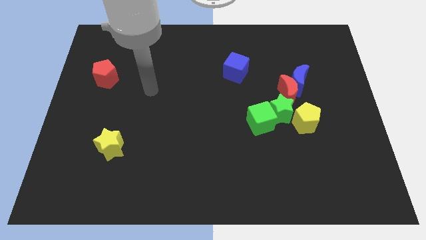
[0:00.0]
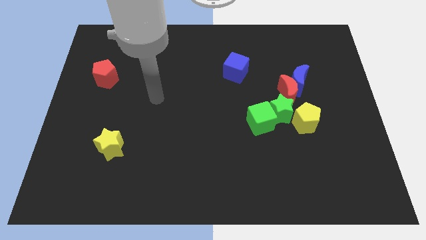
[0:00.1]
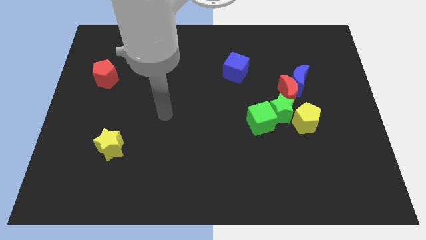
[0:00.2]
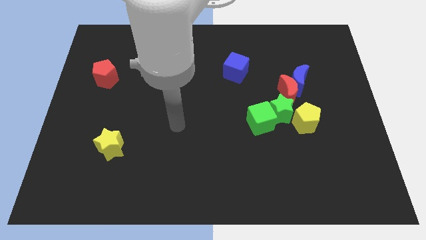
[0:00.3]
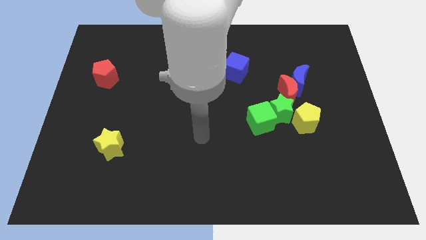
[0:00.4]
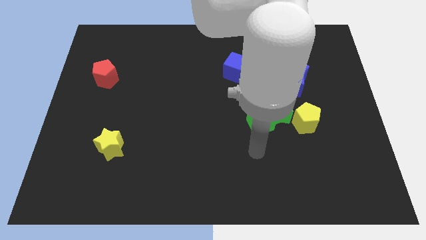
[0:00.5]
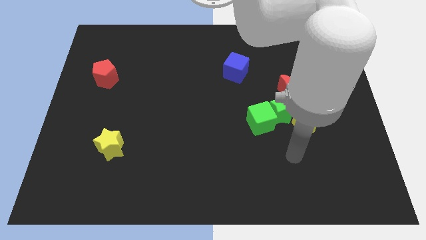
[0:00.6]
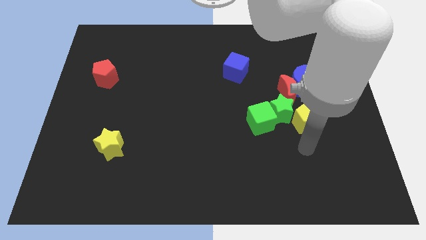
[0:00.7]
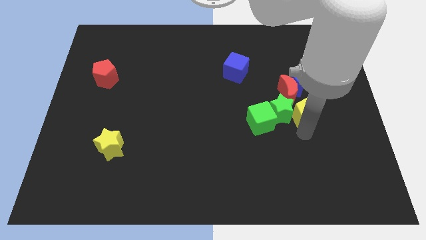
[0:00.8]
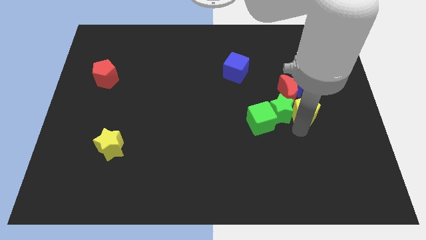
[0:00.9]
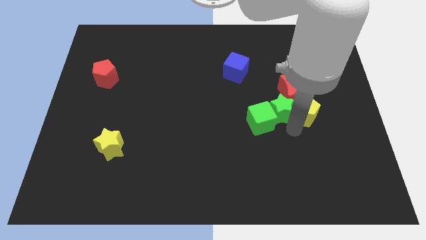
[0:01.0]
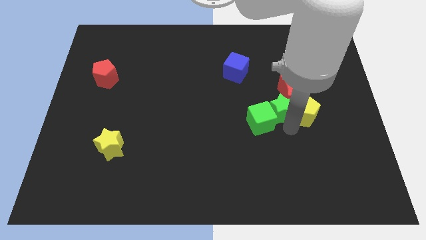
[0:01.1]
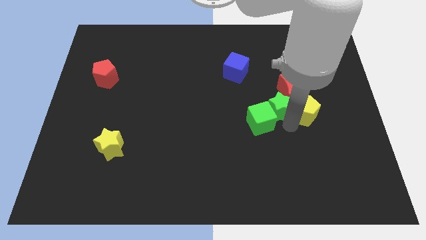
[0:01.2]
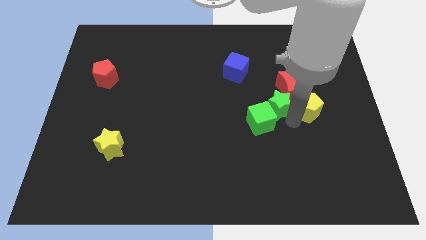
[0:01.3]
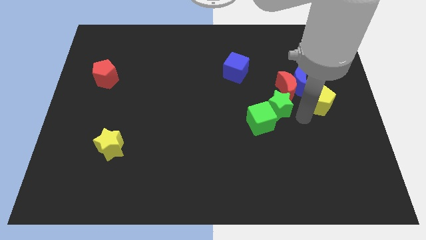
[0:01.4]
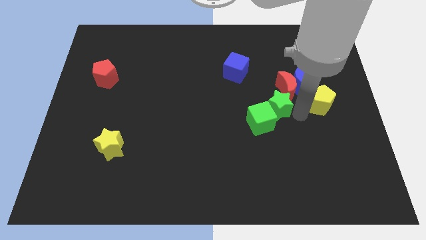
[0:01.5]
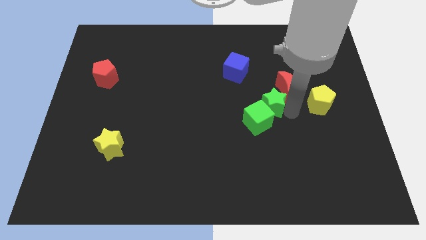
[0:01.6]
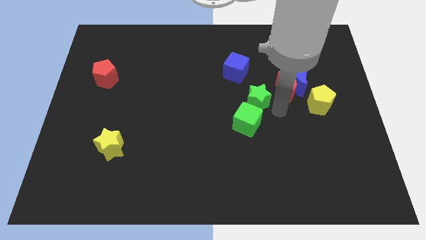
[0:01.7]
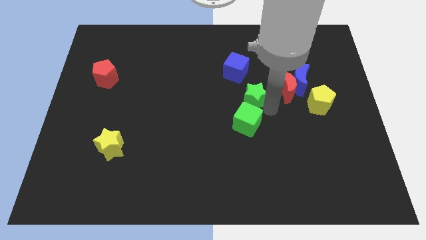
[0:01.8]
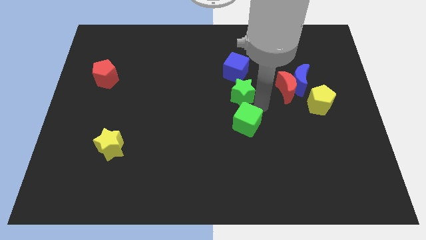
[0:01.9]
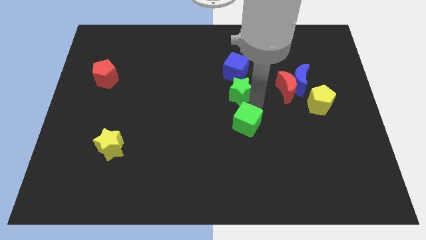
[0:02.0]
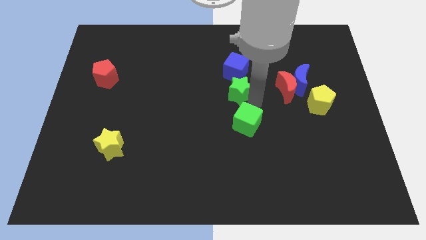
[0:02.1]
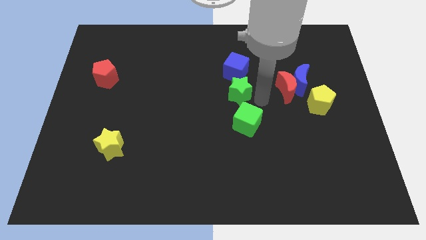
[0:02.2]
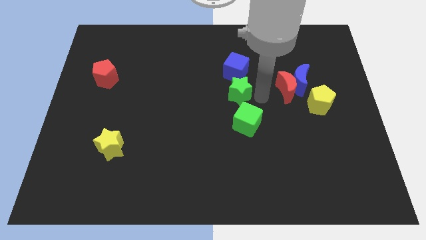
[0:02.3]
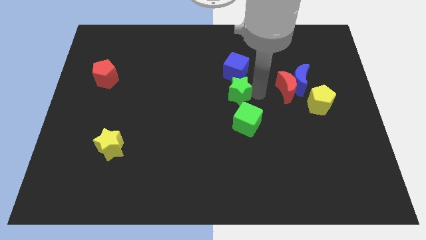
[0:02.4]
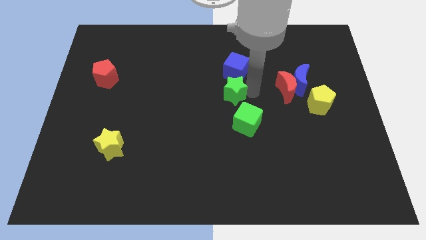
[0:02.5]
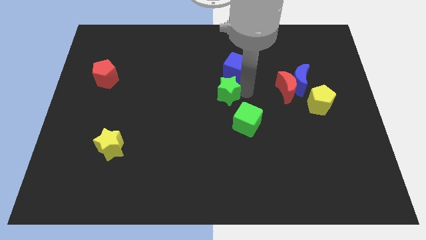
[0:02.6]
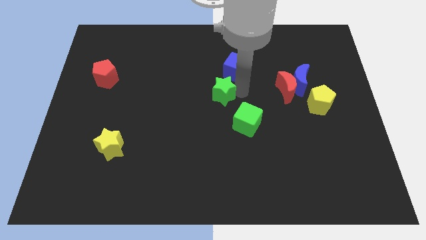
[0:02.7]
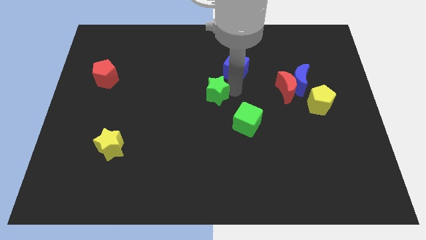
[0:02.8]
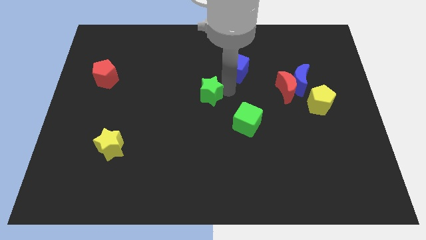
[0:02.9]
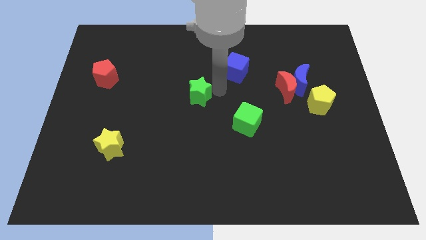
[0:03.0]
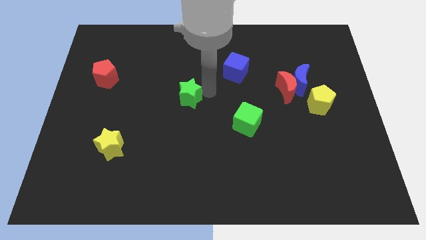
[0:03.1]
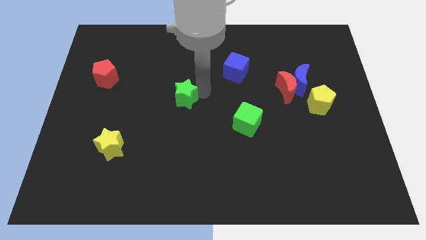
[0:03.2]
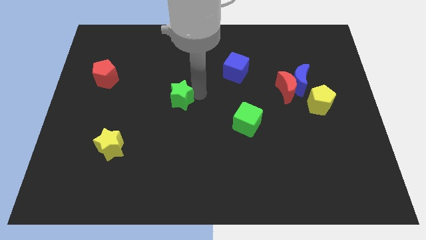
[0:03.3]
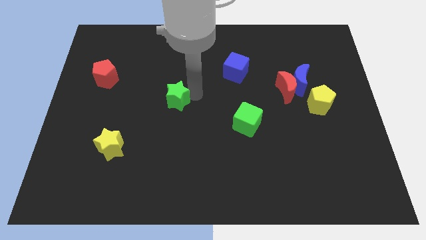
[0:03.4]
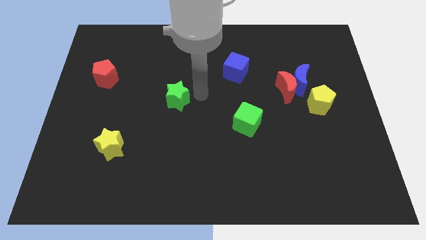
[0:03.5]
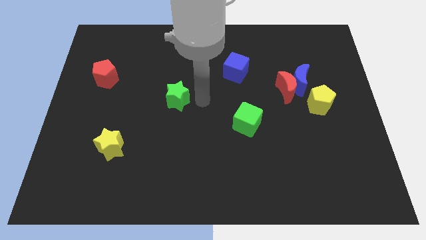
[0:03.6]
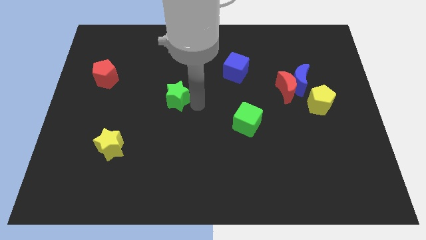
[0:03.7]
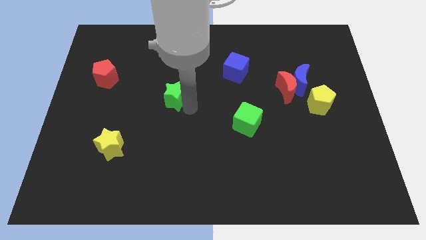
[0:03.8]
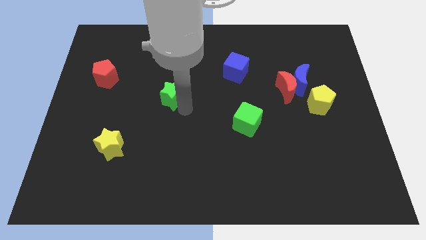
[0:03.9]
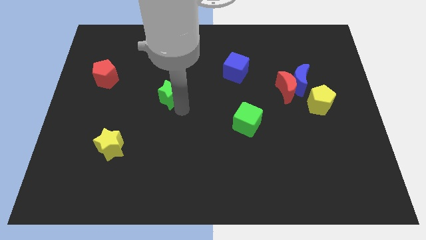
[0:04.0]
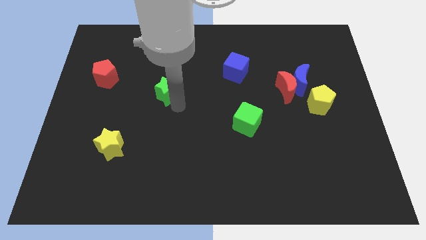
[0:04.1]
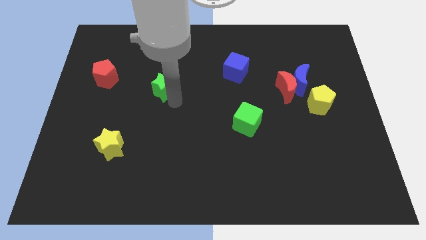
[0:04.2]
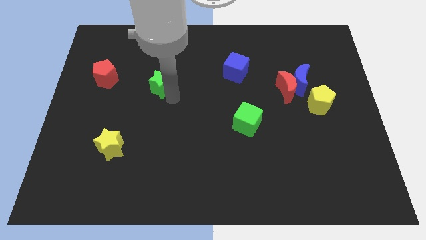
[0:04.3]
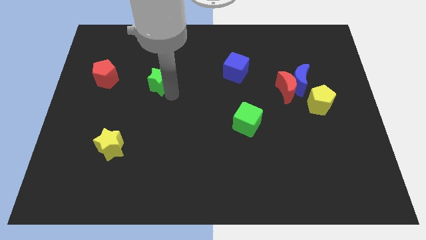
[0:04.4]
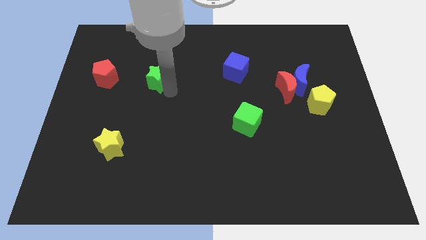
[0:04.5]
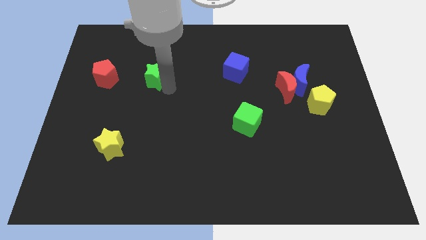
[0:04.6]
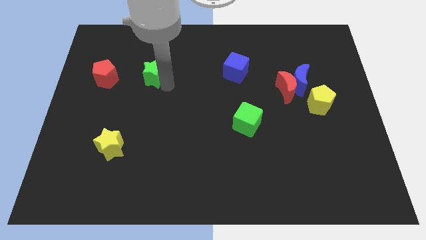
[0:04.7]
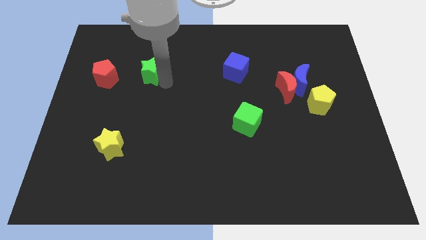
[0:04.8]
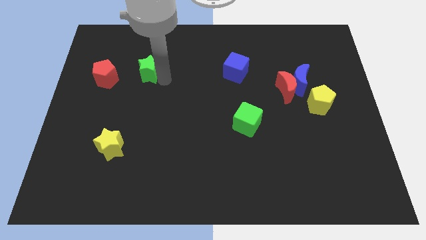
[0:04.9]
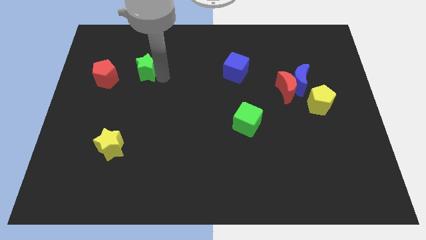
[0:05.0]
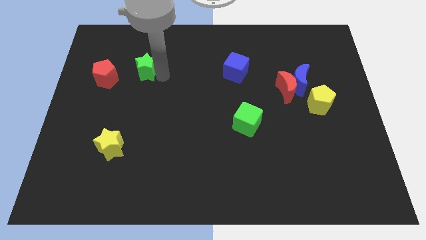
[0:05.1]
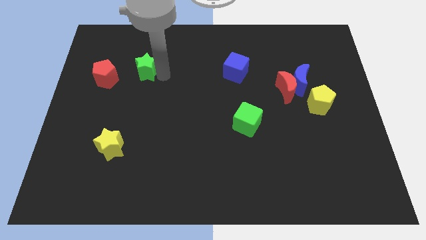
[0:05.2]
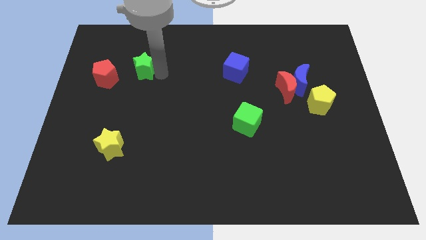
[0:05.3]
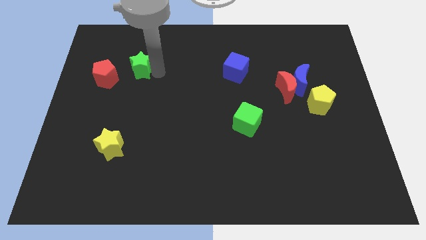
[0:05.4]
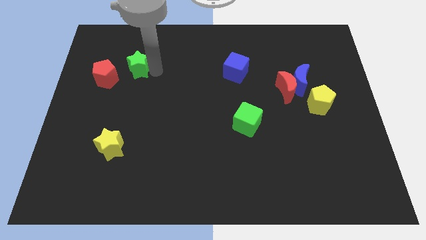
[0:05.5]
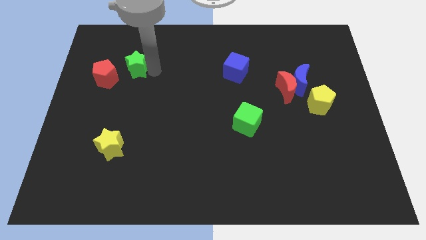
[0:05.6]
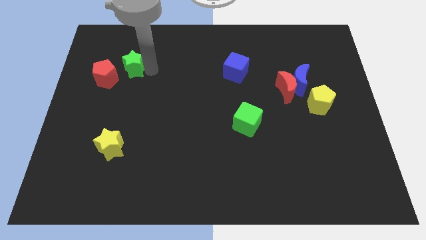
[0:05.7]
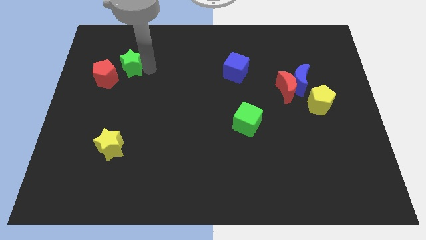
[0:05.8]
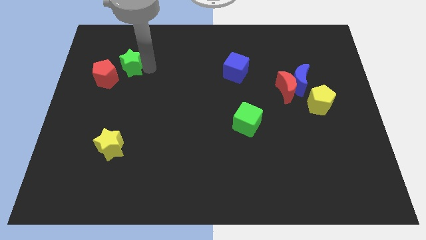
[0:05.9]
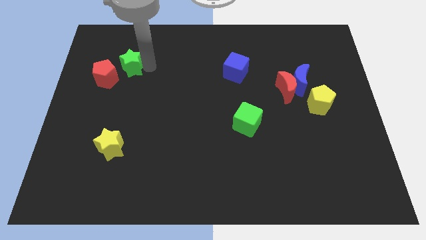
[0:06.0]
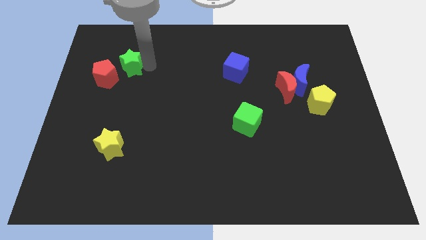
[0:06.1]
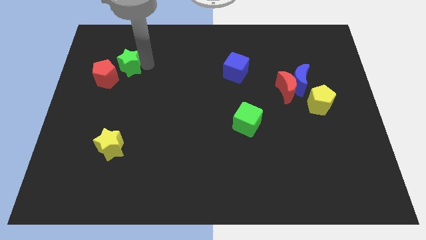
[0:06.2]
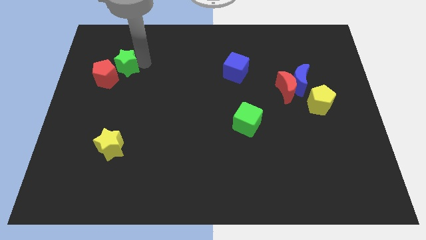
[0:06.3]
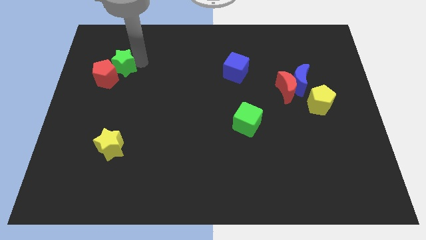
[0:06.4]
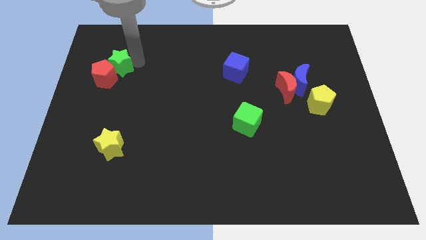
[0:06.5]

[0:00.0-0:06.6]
put the green star towards the red pentagon

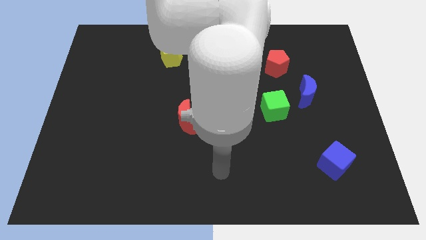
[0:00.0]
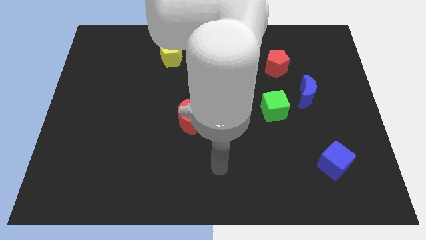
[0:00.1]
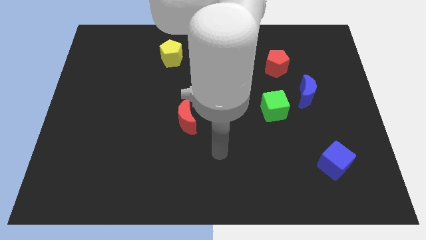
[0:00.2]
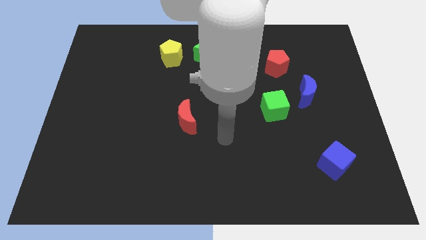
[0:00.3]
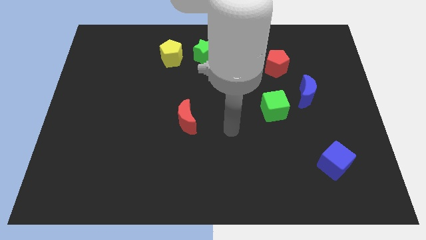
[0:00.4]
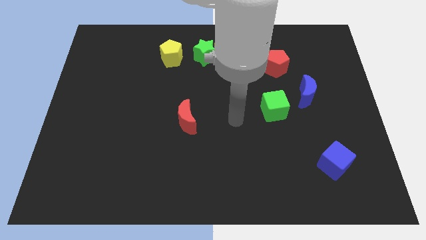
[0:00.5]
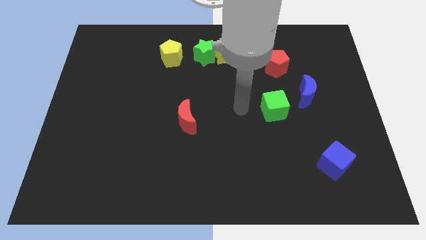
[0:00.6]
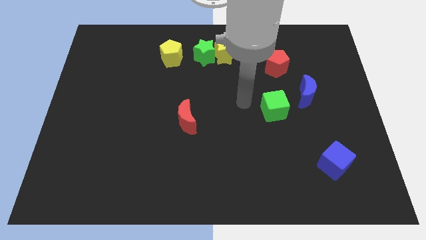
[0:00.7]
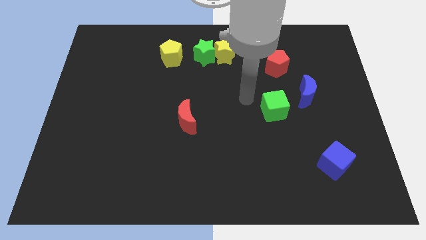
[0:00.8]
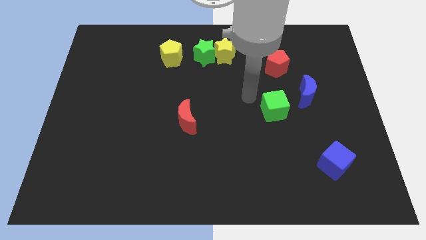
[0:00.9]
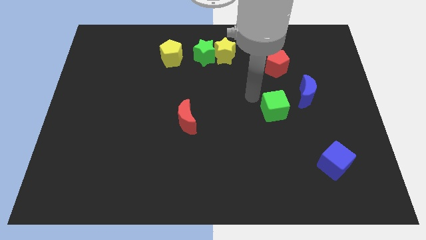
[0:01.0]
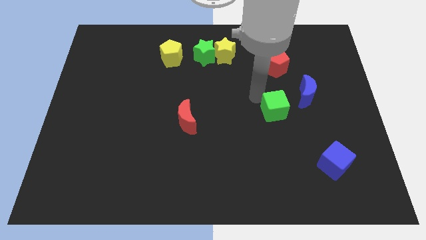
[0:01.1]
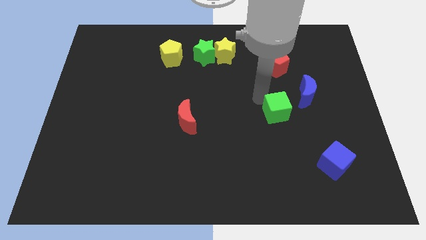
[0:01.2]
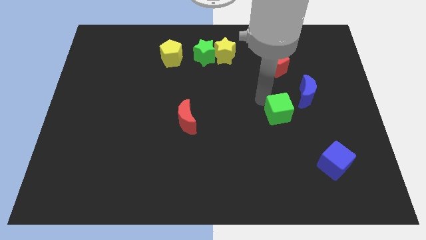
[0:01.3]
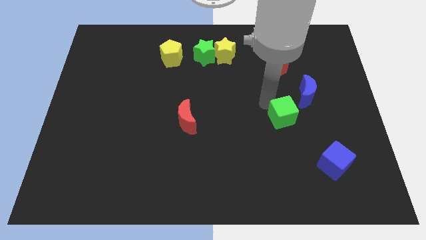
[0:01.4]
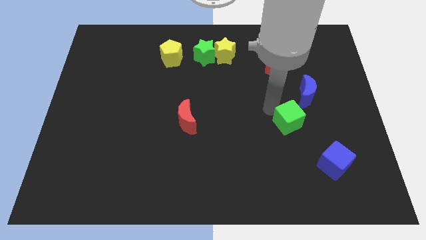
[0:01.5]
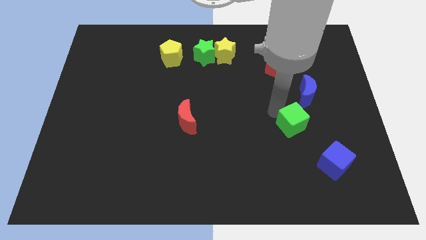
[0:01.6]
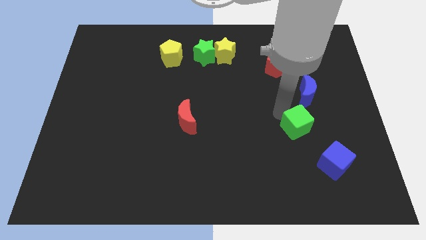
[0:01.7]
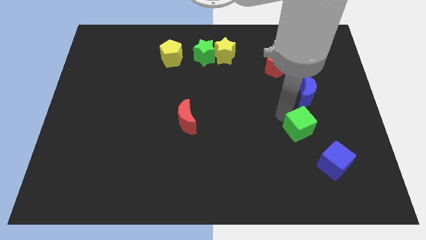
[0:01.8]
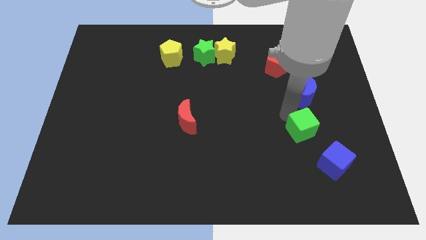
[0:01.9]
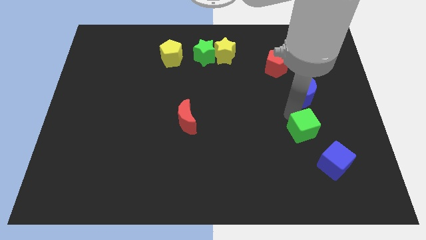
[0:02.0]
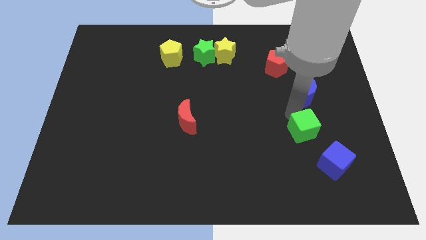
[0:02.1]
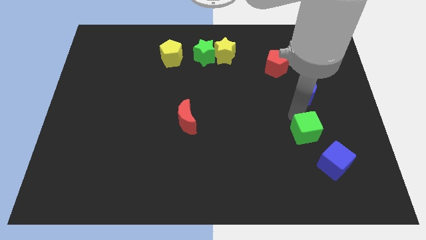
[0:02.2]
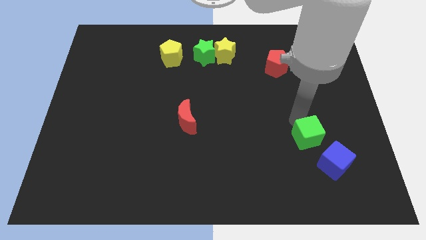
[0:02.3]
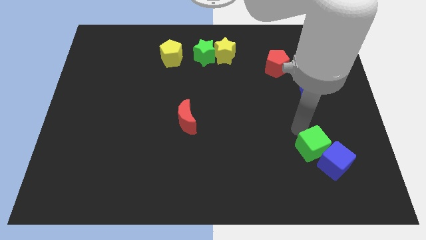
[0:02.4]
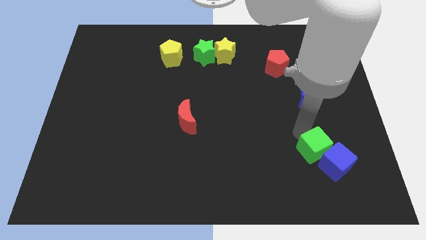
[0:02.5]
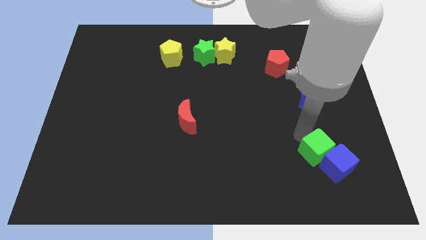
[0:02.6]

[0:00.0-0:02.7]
push the green cube close to the blue cube
